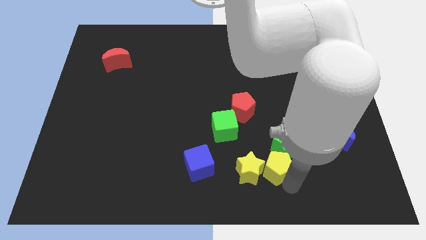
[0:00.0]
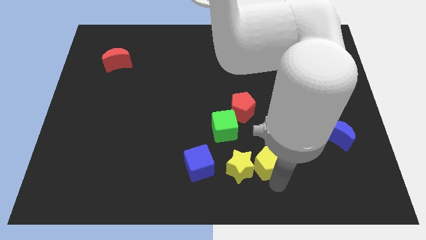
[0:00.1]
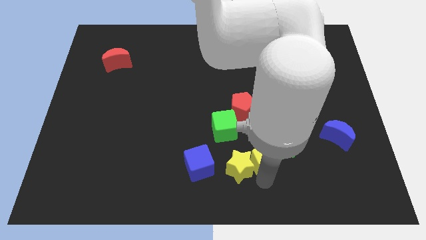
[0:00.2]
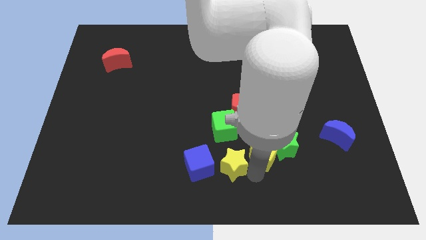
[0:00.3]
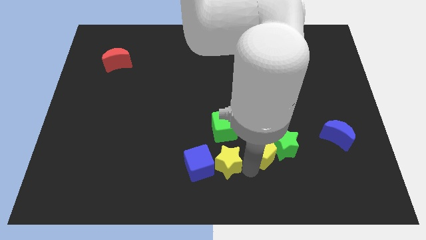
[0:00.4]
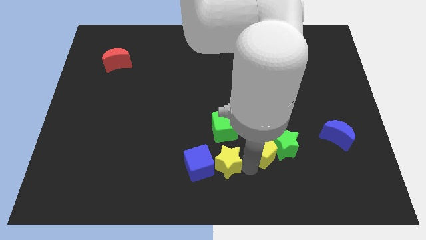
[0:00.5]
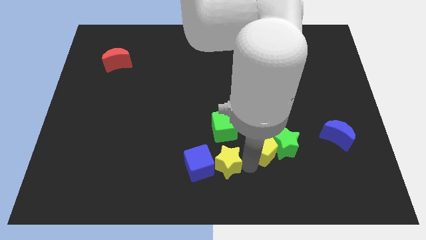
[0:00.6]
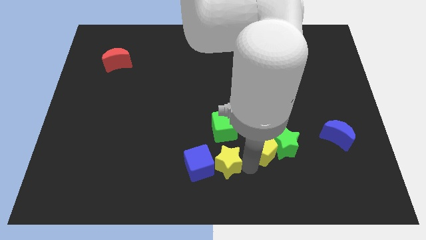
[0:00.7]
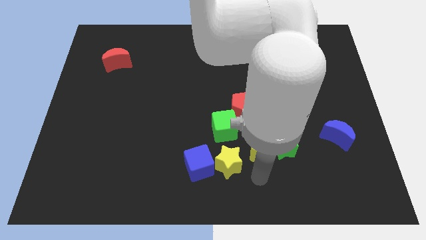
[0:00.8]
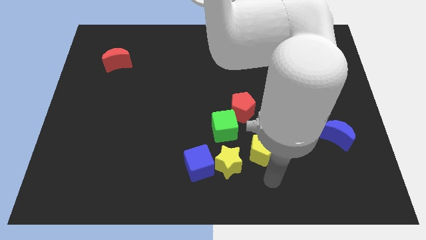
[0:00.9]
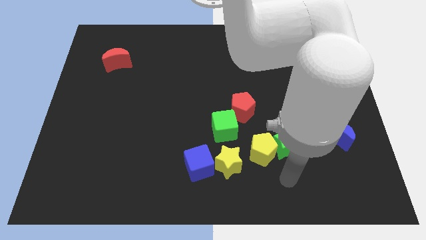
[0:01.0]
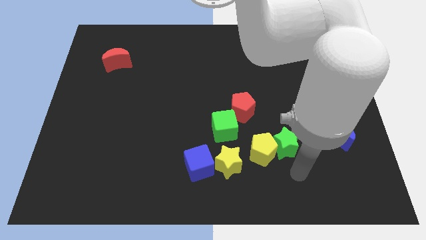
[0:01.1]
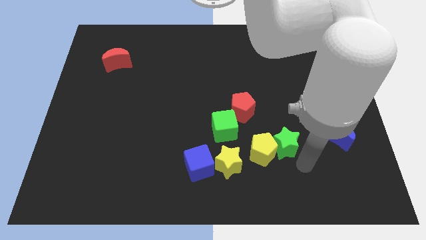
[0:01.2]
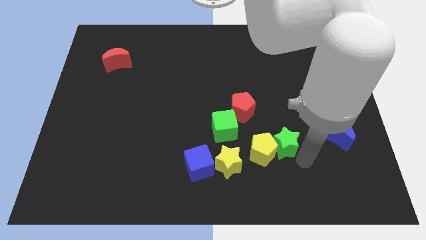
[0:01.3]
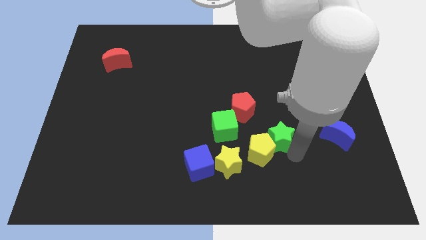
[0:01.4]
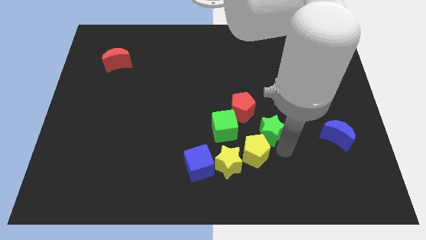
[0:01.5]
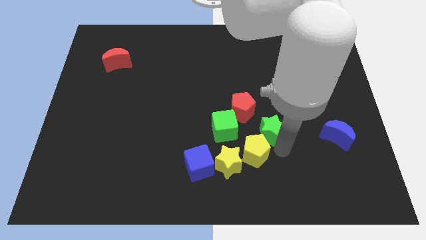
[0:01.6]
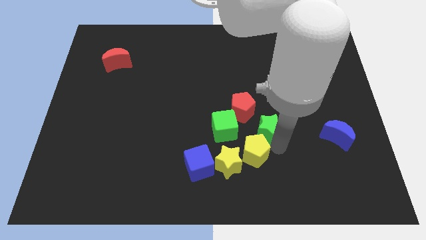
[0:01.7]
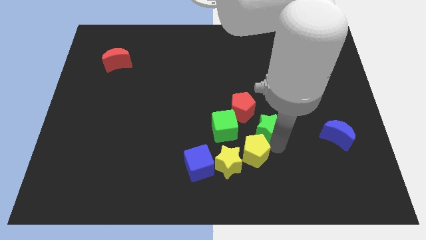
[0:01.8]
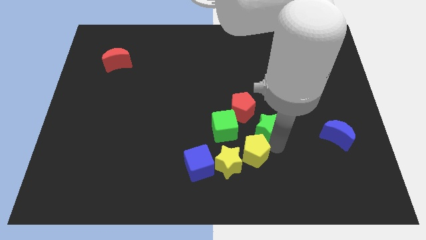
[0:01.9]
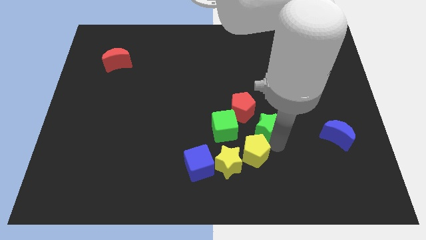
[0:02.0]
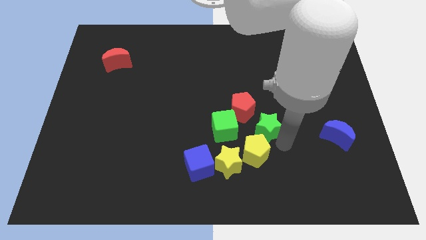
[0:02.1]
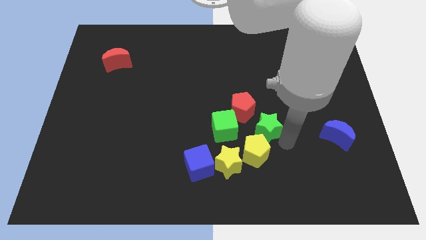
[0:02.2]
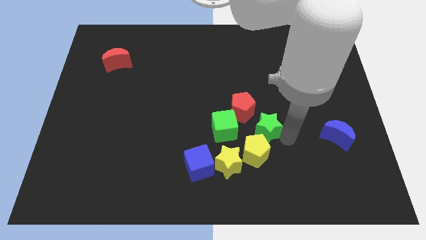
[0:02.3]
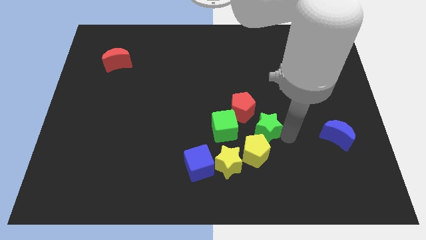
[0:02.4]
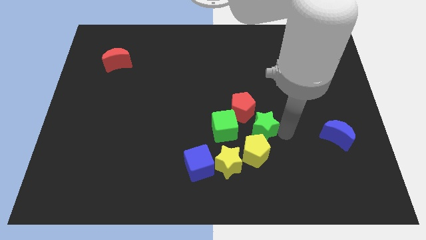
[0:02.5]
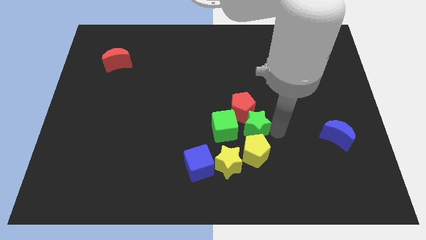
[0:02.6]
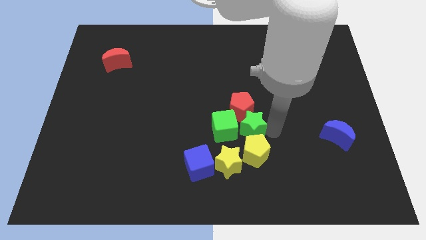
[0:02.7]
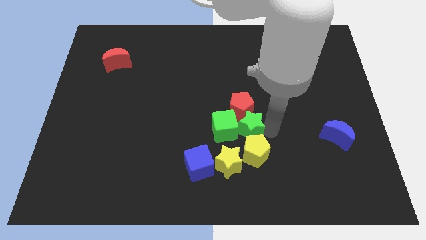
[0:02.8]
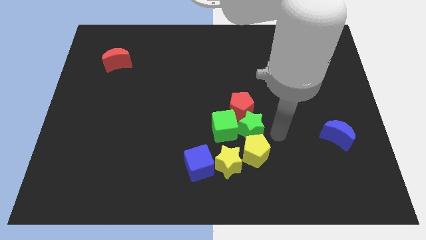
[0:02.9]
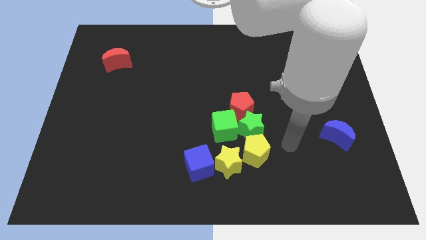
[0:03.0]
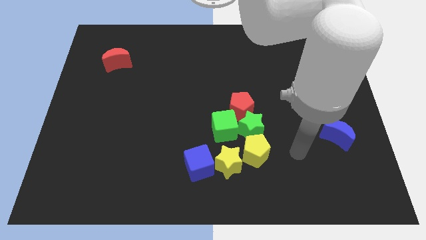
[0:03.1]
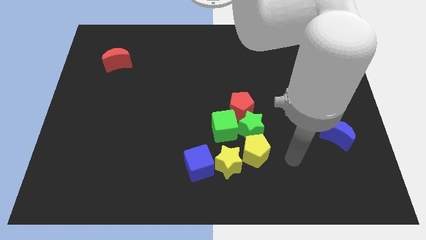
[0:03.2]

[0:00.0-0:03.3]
place the green star above the yellow pentagon

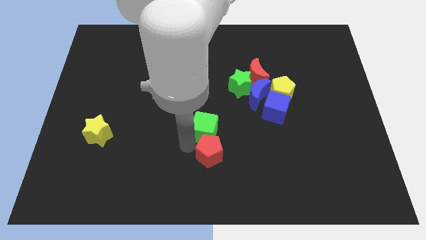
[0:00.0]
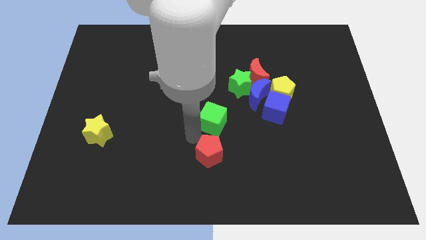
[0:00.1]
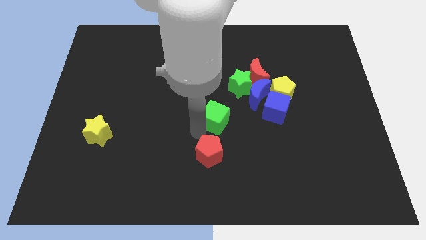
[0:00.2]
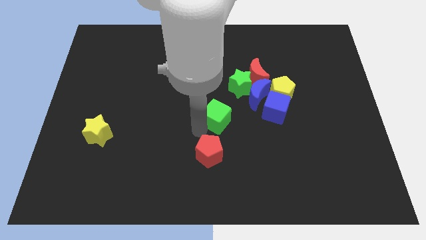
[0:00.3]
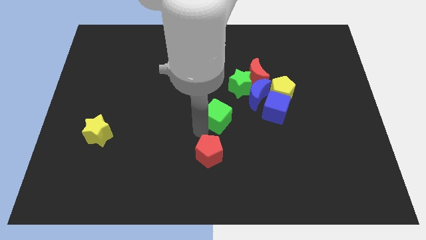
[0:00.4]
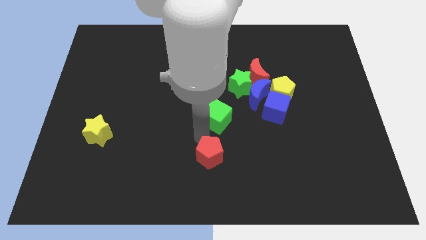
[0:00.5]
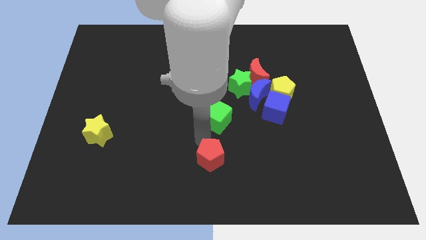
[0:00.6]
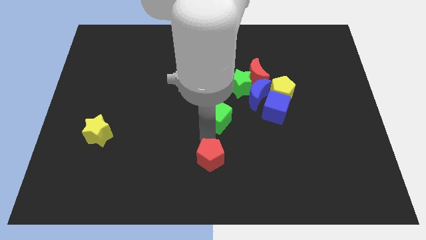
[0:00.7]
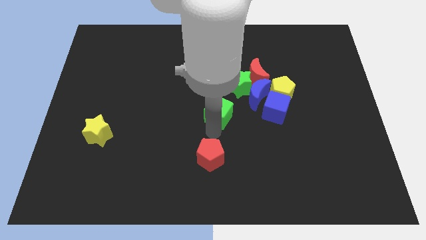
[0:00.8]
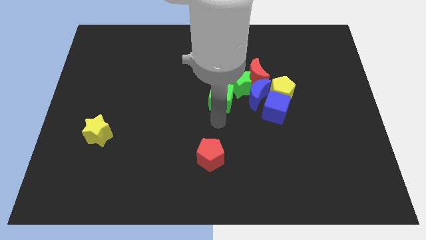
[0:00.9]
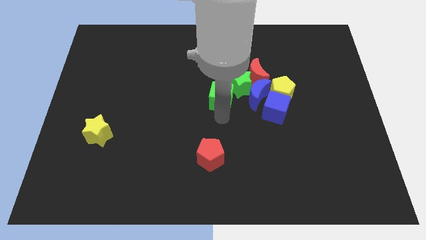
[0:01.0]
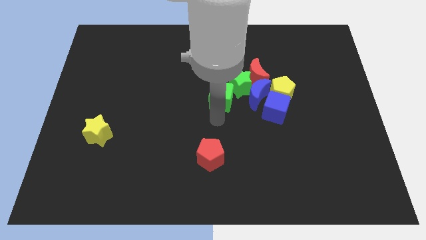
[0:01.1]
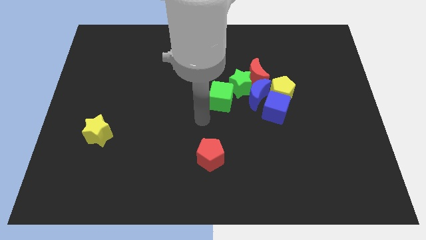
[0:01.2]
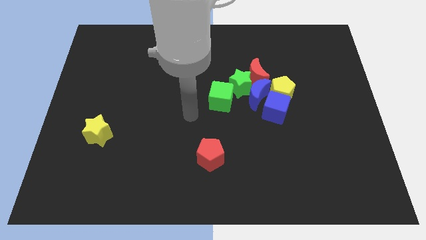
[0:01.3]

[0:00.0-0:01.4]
place the green cube close to the green star

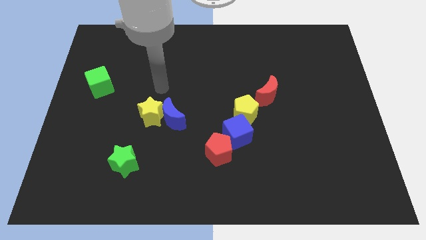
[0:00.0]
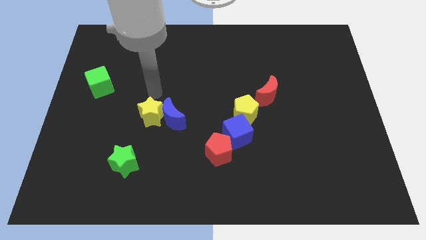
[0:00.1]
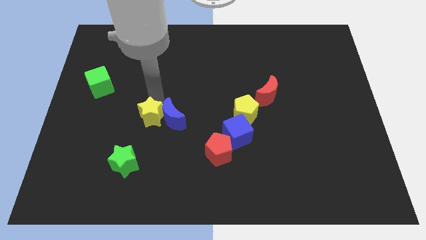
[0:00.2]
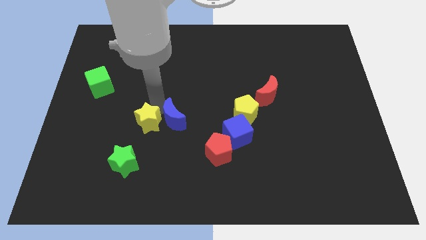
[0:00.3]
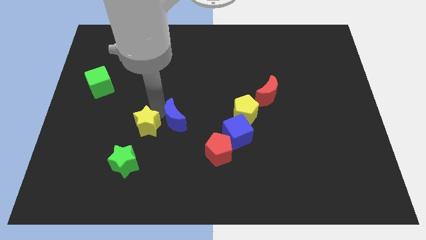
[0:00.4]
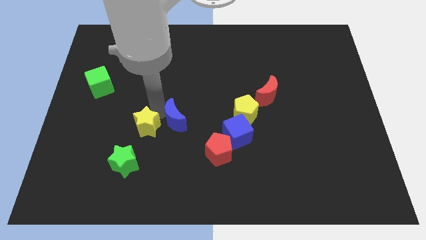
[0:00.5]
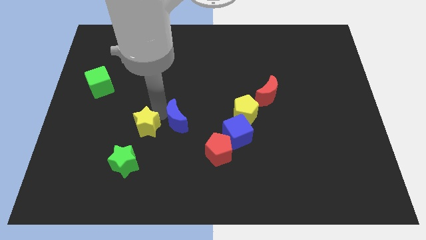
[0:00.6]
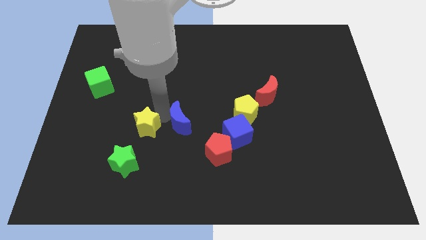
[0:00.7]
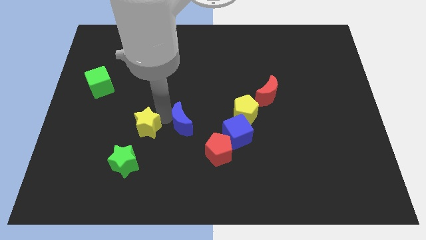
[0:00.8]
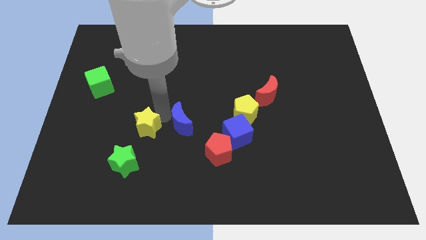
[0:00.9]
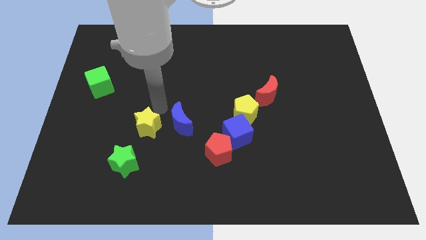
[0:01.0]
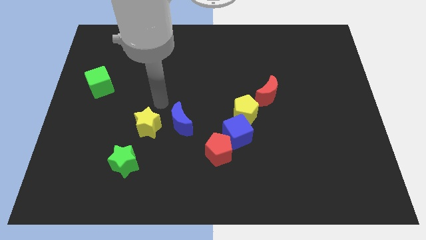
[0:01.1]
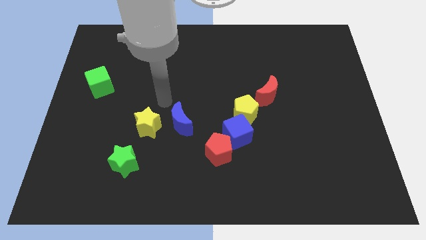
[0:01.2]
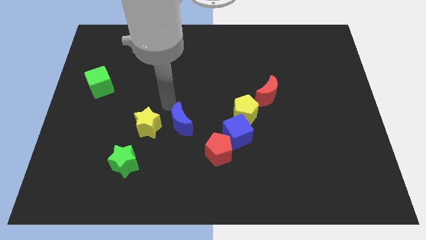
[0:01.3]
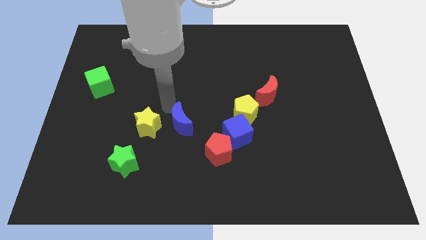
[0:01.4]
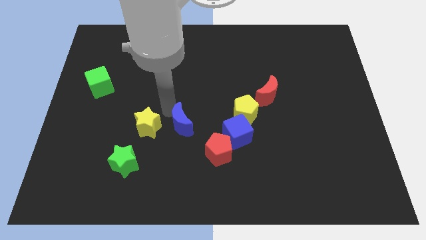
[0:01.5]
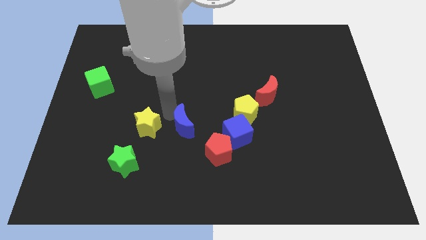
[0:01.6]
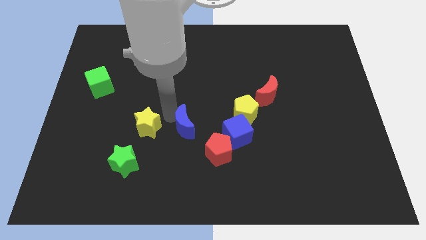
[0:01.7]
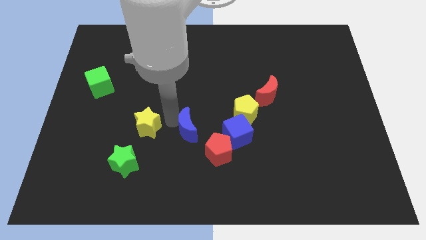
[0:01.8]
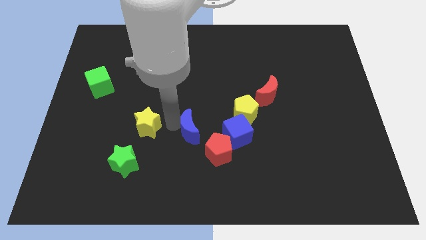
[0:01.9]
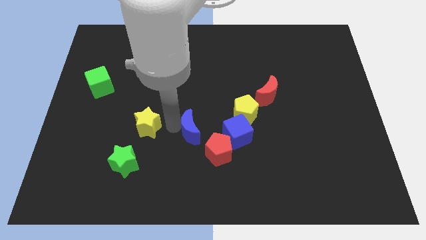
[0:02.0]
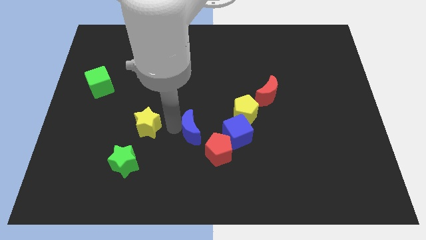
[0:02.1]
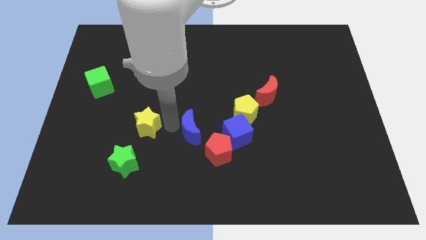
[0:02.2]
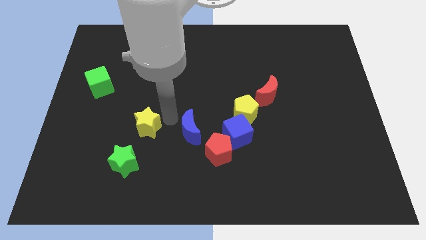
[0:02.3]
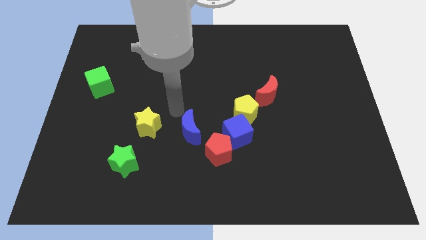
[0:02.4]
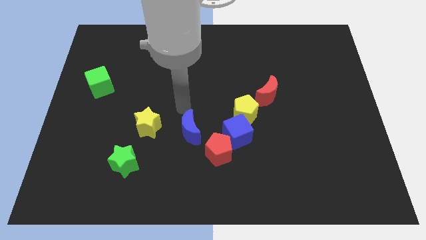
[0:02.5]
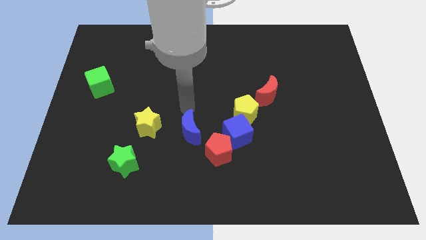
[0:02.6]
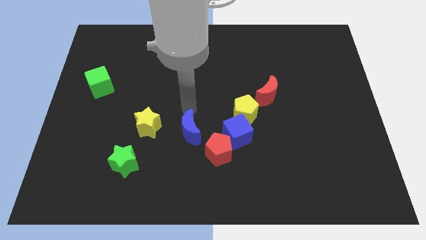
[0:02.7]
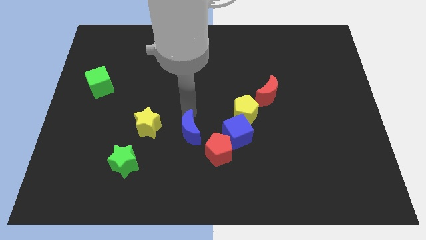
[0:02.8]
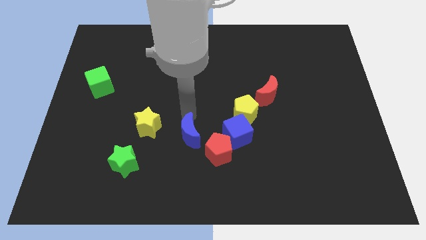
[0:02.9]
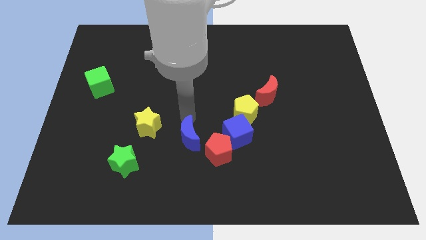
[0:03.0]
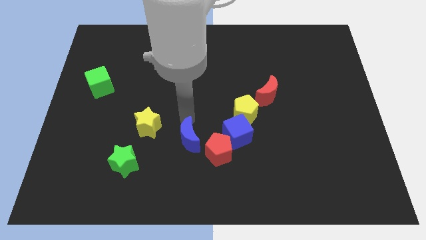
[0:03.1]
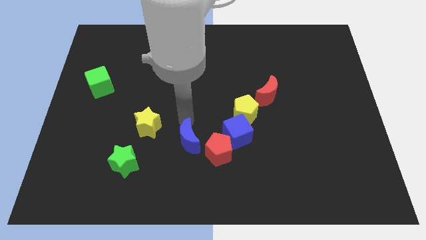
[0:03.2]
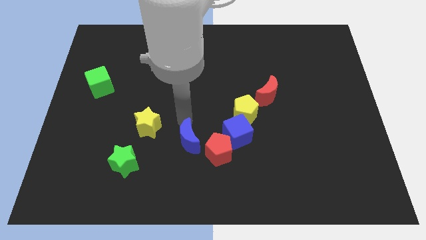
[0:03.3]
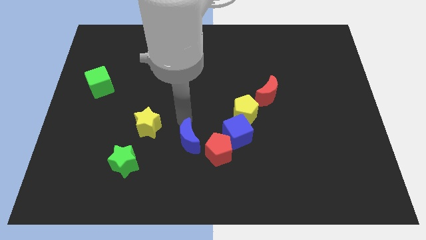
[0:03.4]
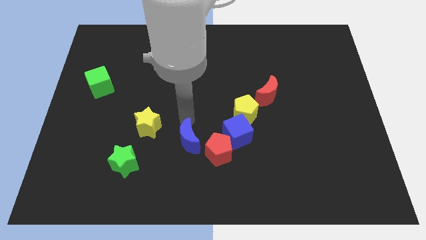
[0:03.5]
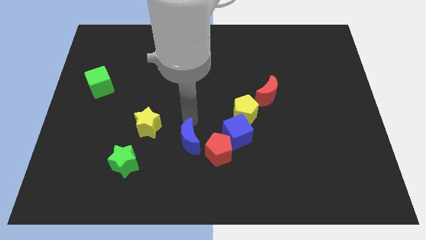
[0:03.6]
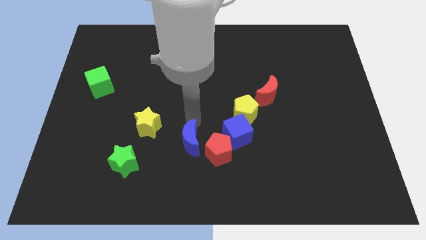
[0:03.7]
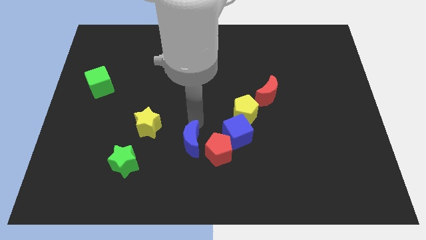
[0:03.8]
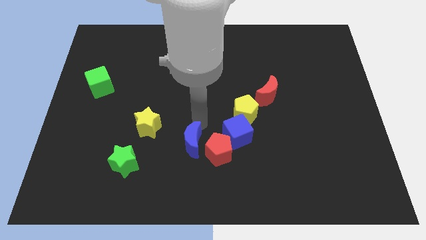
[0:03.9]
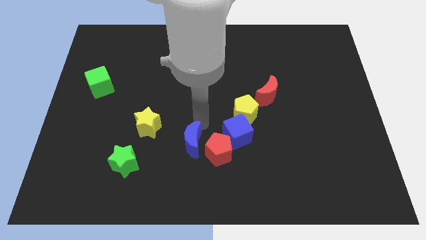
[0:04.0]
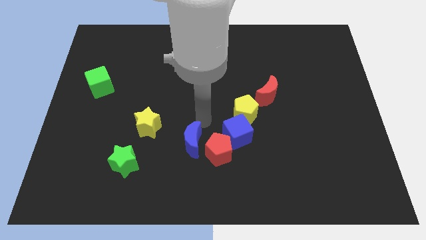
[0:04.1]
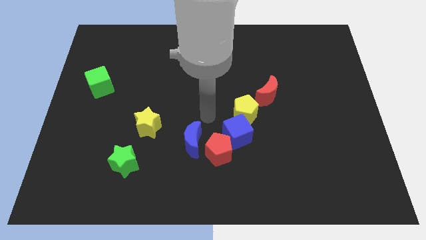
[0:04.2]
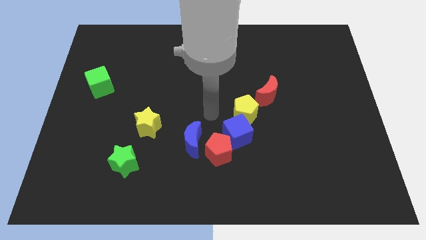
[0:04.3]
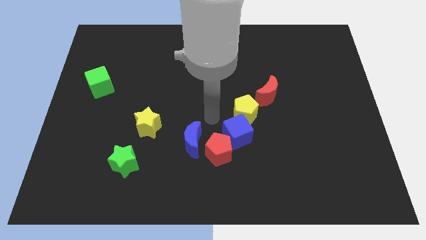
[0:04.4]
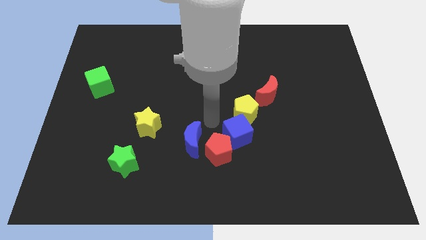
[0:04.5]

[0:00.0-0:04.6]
separate blue crescent from the yellow star
